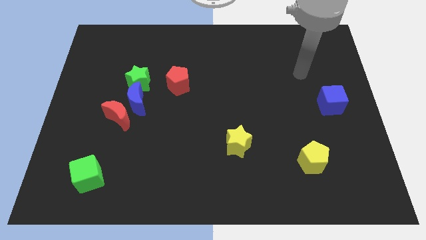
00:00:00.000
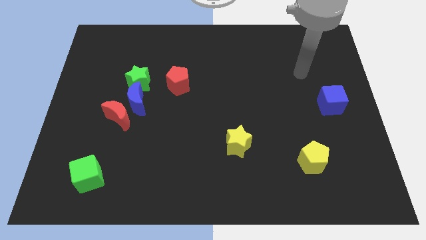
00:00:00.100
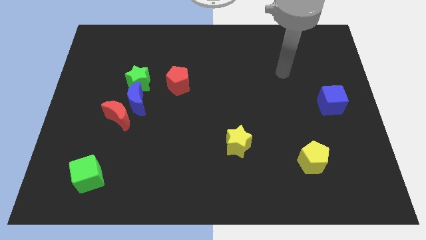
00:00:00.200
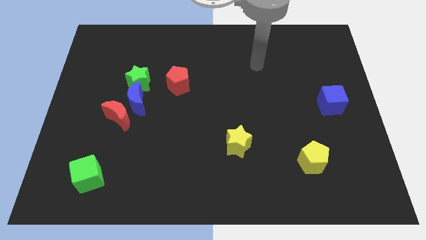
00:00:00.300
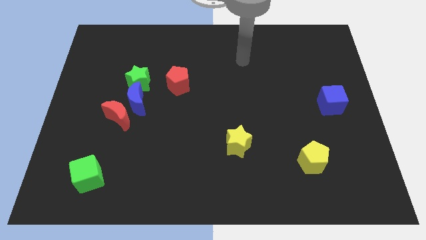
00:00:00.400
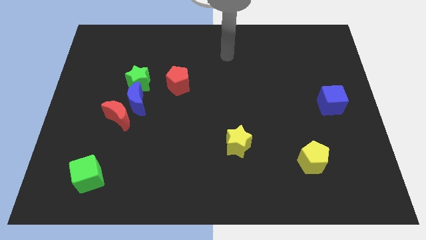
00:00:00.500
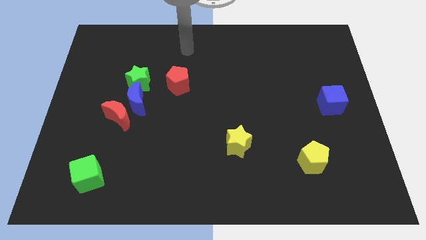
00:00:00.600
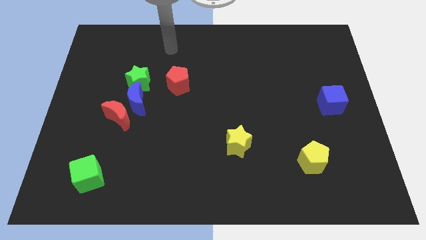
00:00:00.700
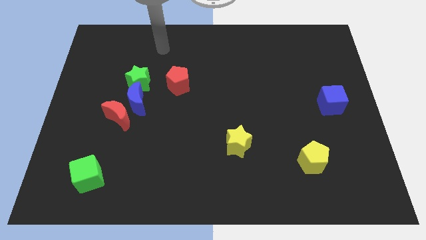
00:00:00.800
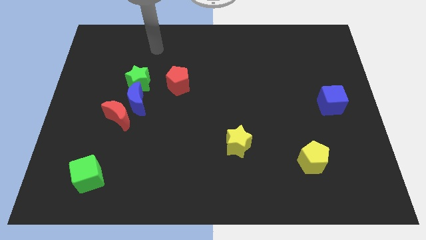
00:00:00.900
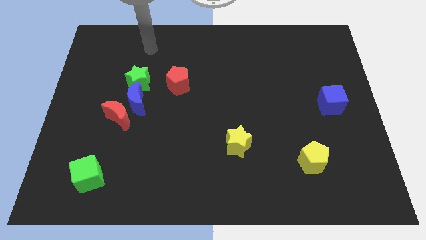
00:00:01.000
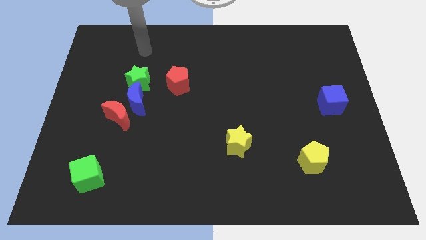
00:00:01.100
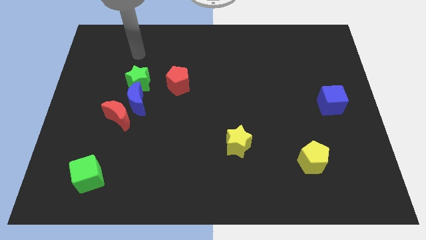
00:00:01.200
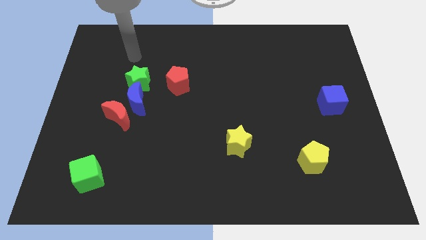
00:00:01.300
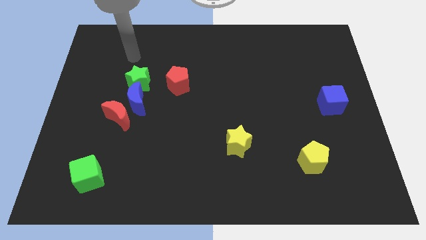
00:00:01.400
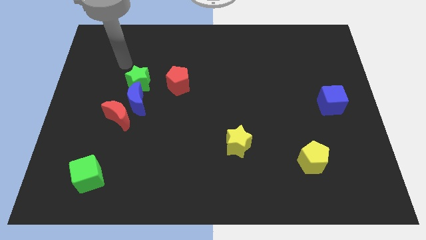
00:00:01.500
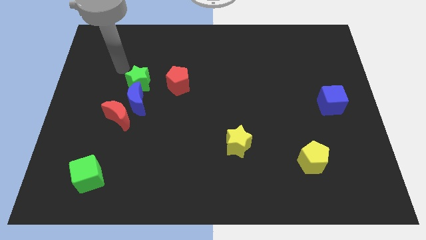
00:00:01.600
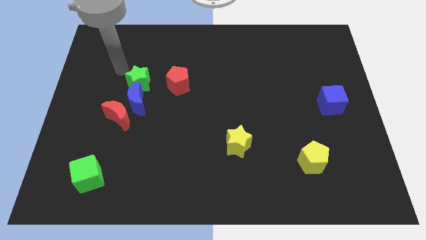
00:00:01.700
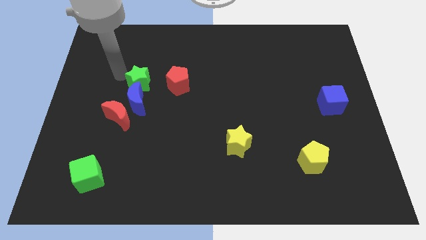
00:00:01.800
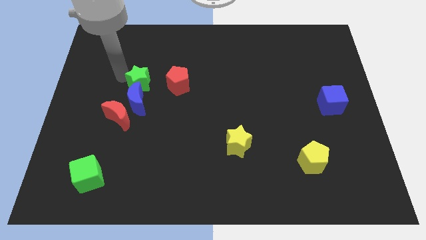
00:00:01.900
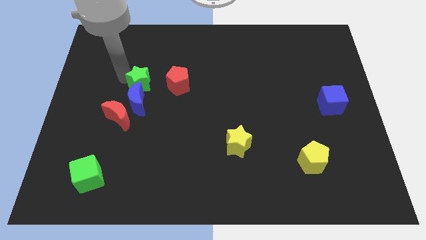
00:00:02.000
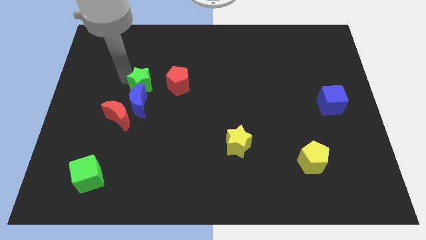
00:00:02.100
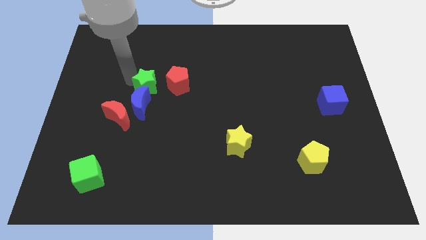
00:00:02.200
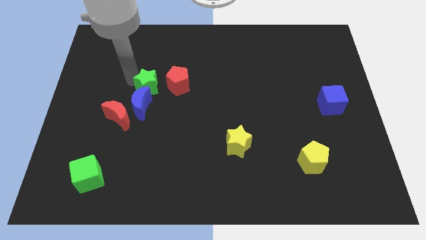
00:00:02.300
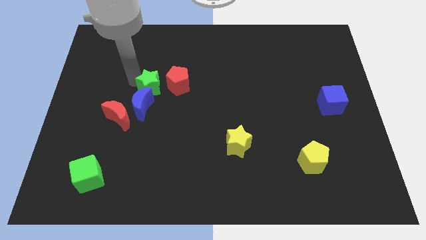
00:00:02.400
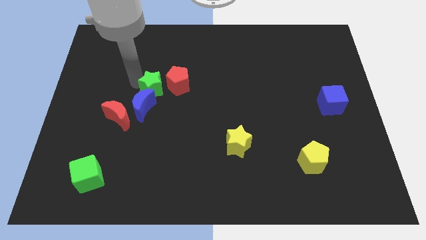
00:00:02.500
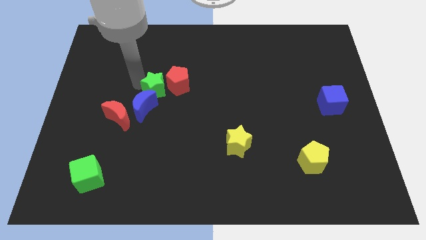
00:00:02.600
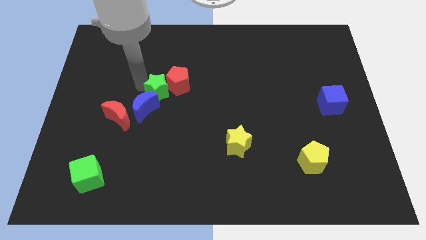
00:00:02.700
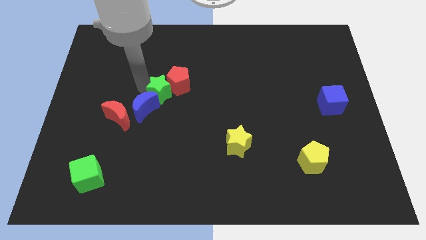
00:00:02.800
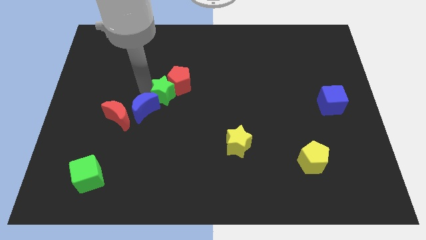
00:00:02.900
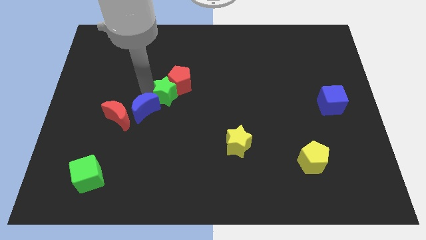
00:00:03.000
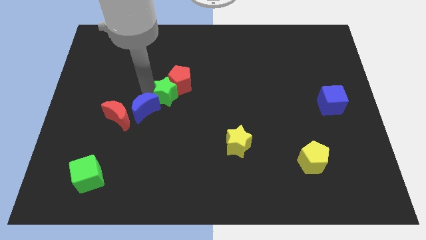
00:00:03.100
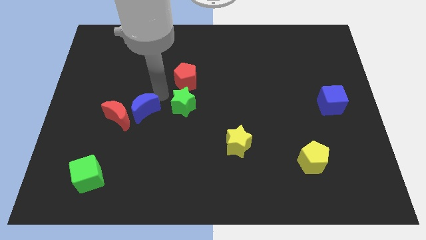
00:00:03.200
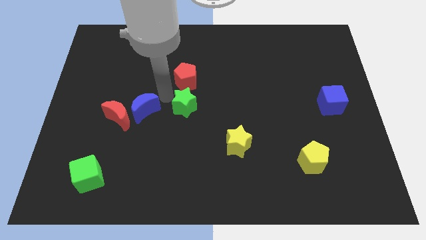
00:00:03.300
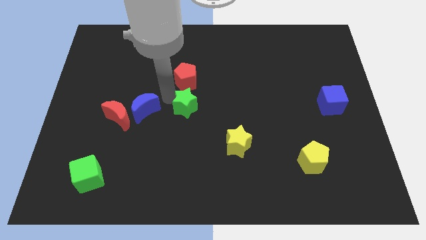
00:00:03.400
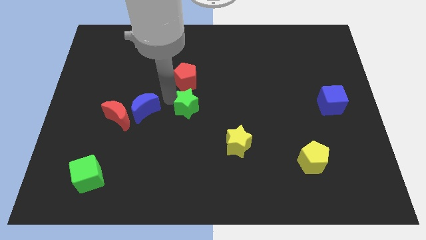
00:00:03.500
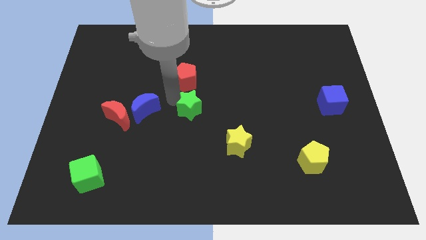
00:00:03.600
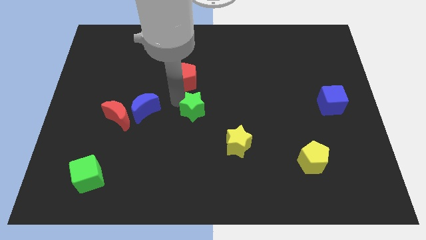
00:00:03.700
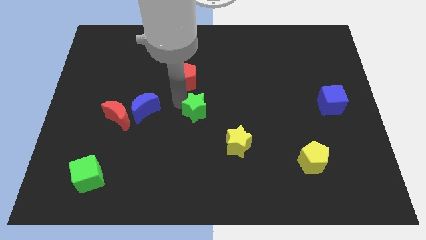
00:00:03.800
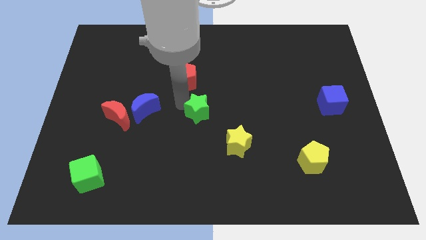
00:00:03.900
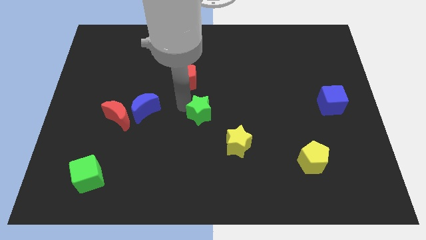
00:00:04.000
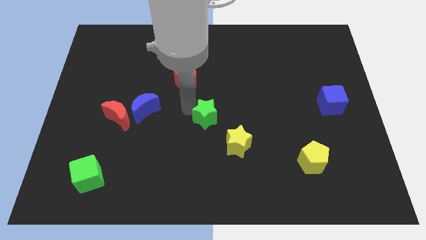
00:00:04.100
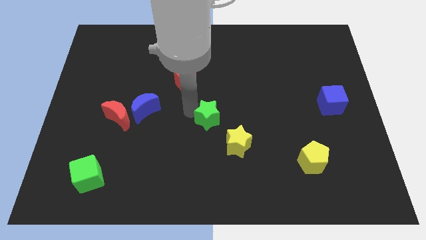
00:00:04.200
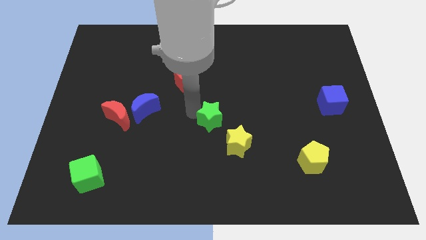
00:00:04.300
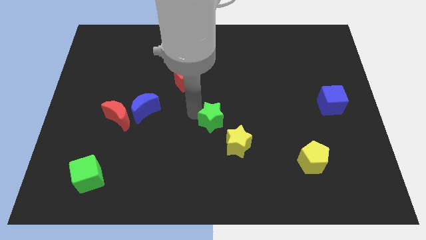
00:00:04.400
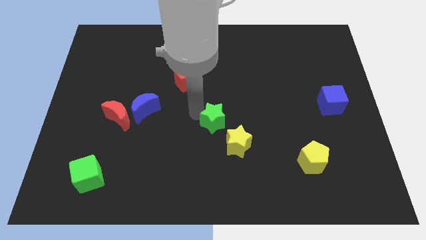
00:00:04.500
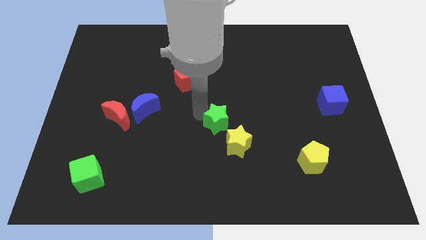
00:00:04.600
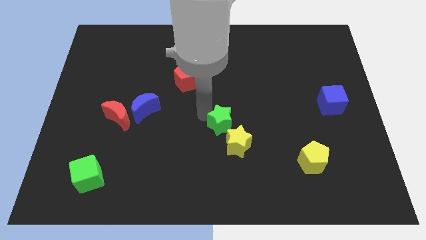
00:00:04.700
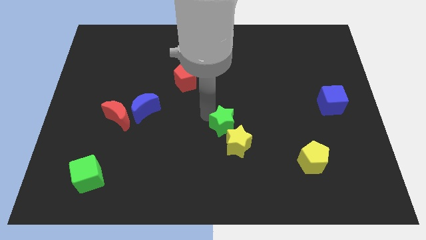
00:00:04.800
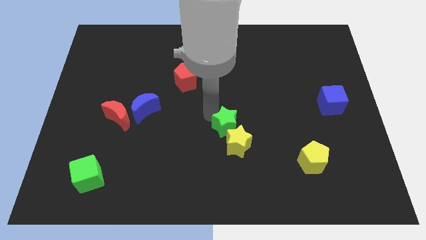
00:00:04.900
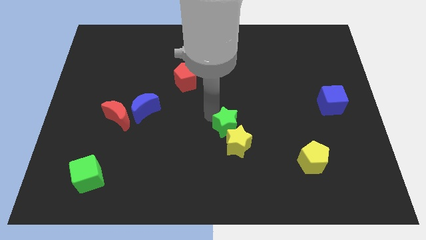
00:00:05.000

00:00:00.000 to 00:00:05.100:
slide the green star towards the yellow star

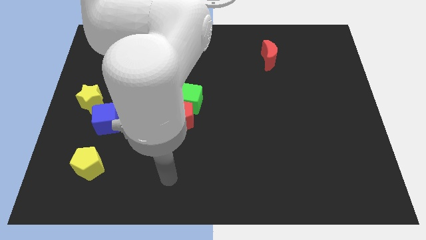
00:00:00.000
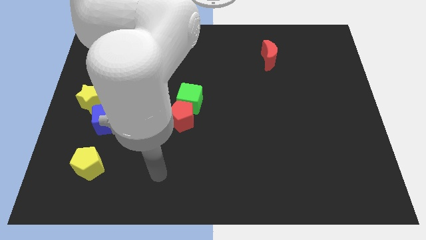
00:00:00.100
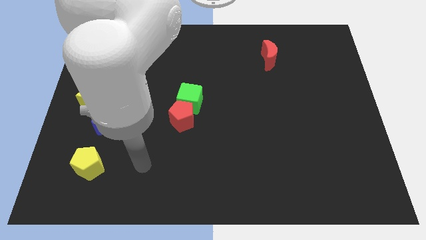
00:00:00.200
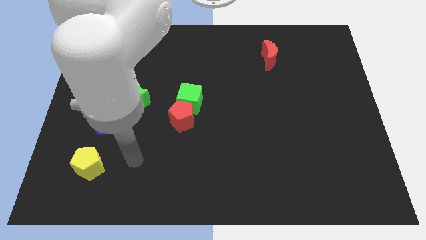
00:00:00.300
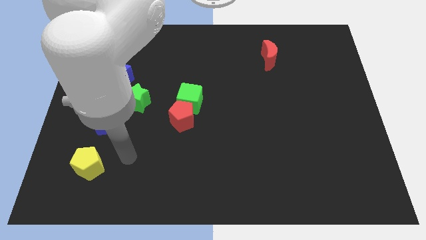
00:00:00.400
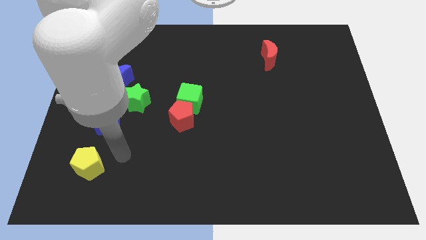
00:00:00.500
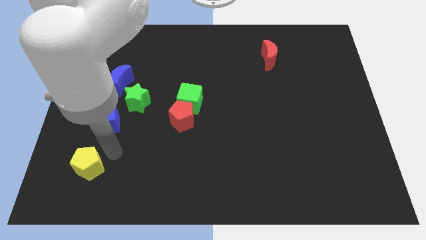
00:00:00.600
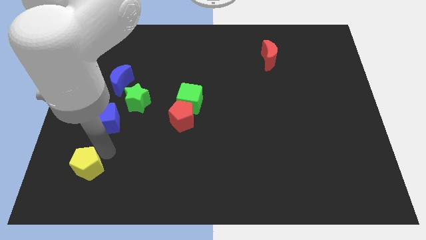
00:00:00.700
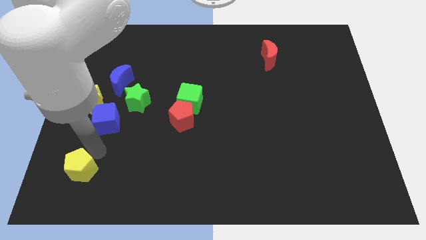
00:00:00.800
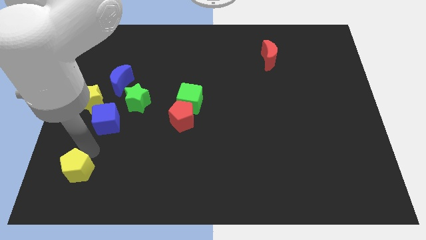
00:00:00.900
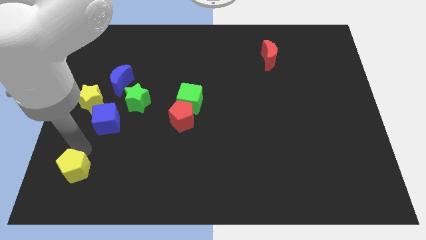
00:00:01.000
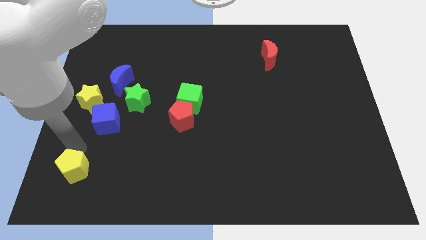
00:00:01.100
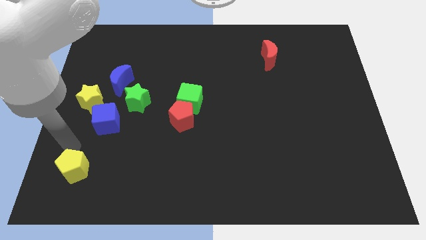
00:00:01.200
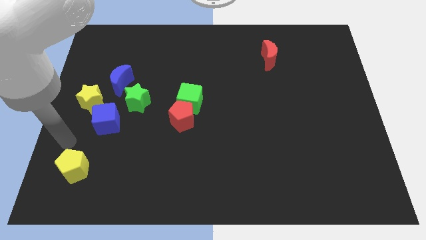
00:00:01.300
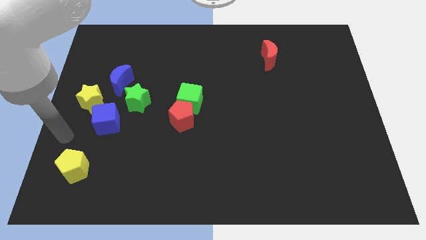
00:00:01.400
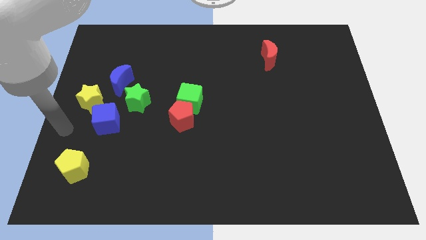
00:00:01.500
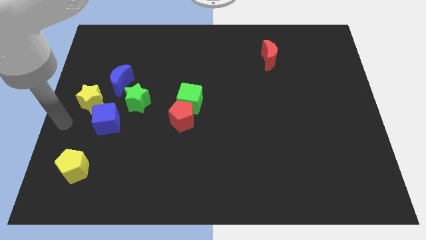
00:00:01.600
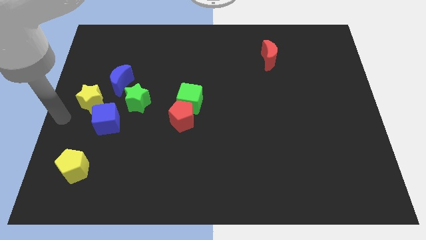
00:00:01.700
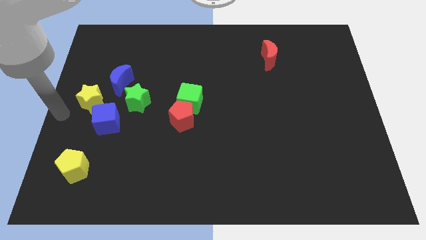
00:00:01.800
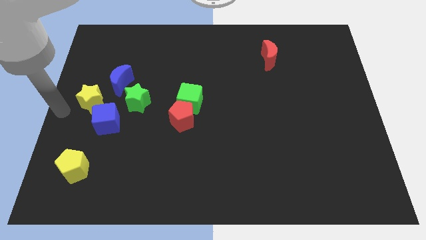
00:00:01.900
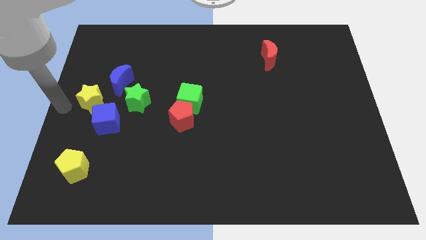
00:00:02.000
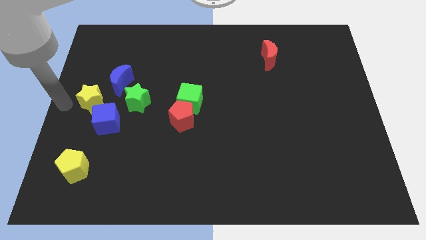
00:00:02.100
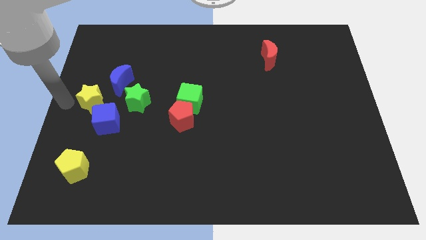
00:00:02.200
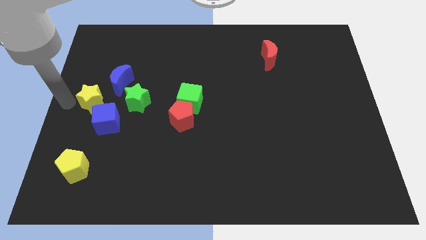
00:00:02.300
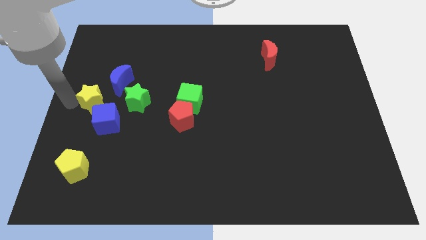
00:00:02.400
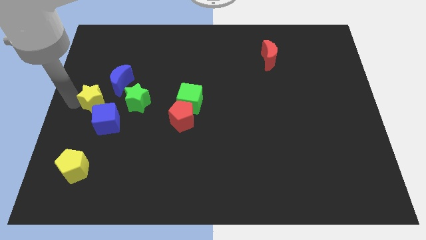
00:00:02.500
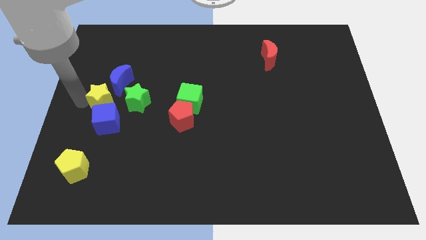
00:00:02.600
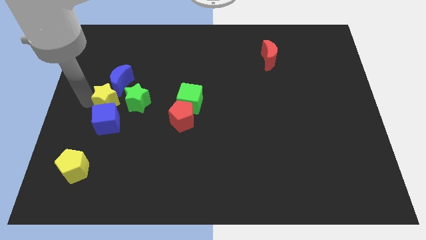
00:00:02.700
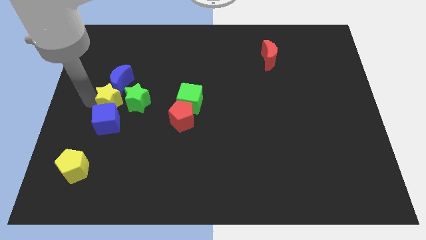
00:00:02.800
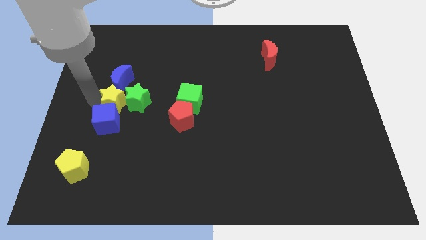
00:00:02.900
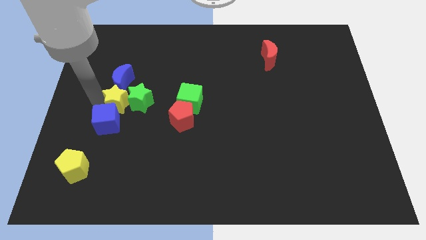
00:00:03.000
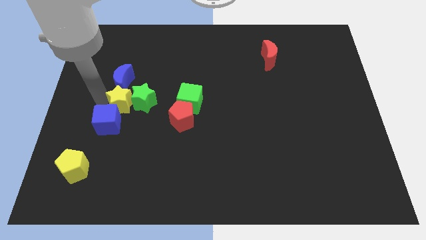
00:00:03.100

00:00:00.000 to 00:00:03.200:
put the yellow star close to the green star

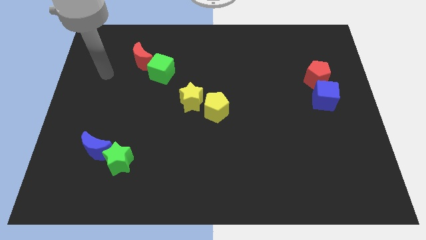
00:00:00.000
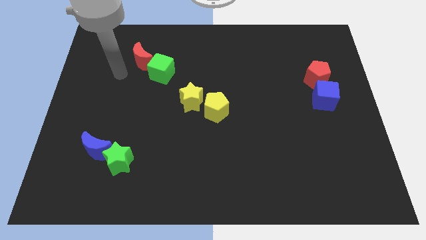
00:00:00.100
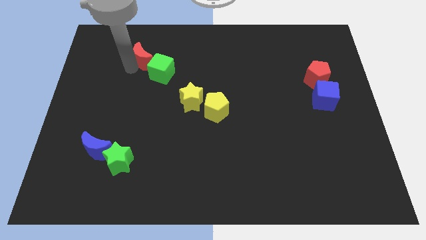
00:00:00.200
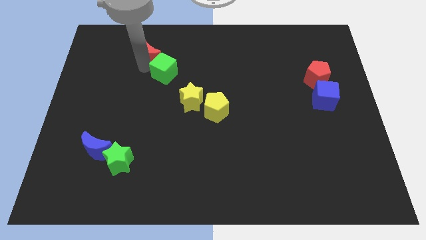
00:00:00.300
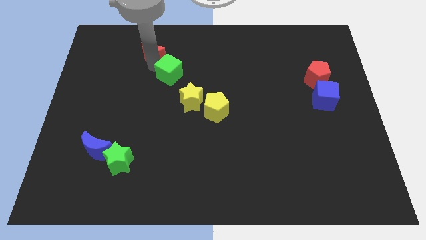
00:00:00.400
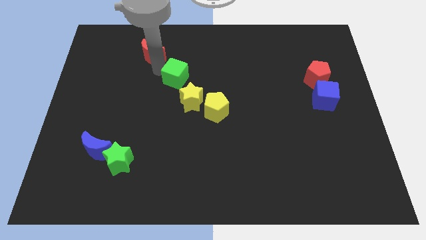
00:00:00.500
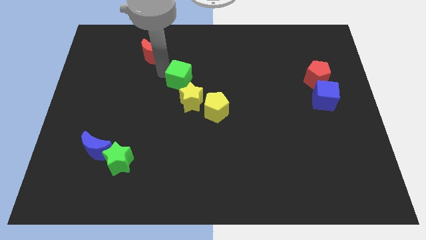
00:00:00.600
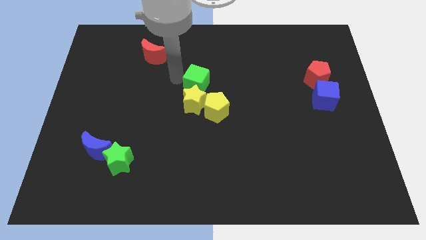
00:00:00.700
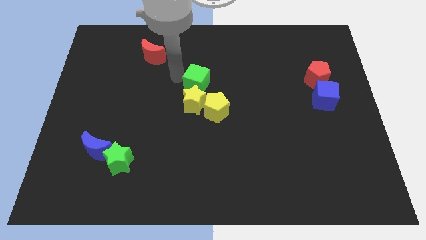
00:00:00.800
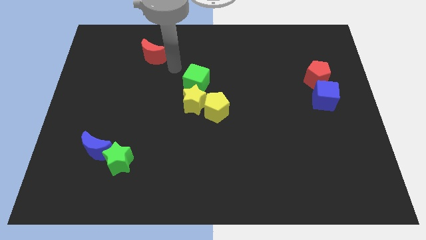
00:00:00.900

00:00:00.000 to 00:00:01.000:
move the green cube next to the yellow star
